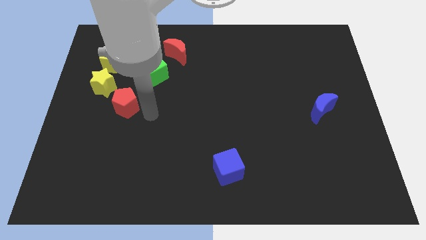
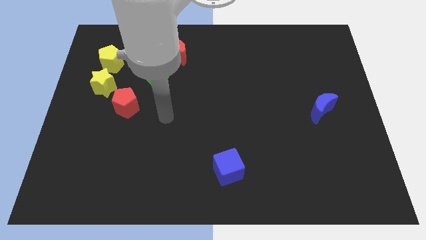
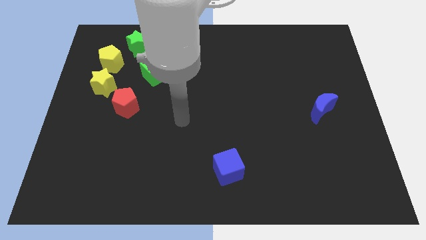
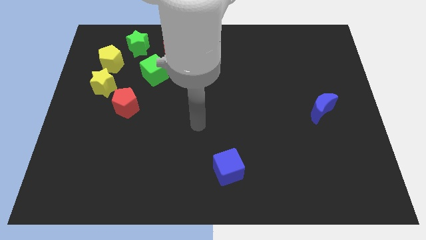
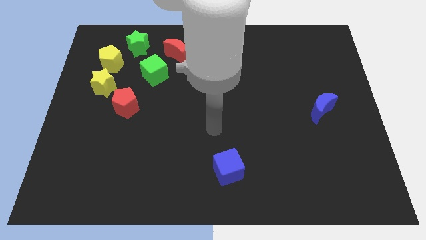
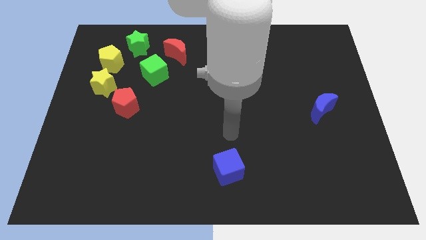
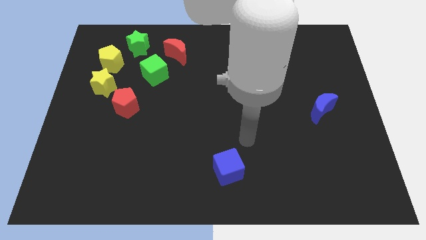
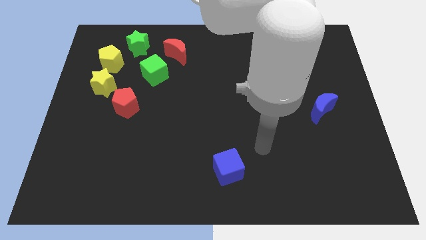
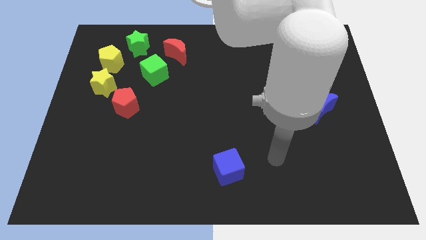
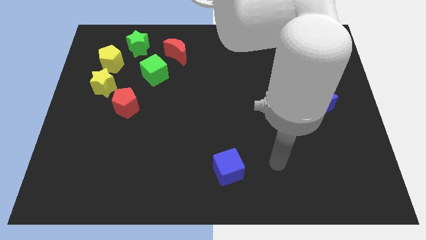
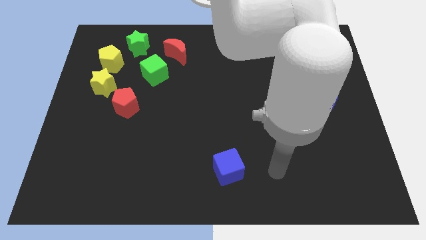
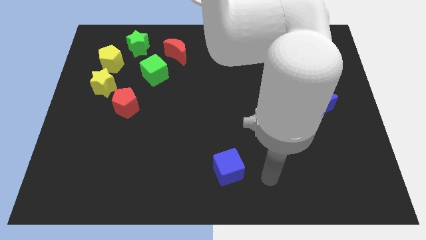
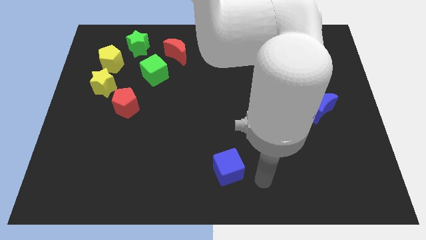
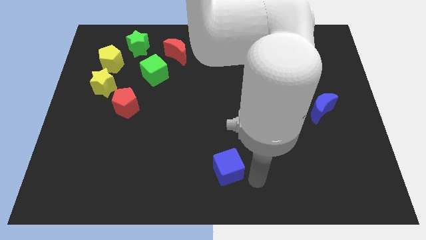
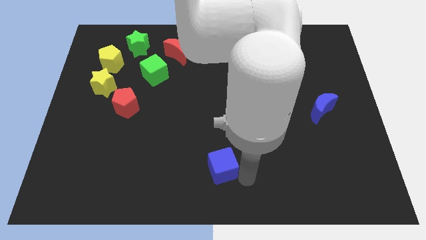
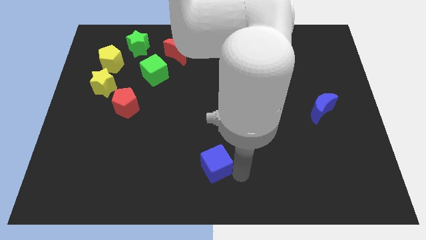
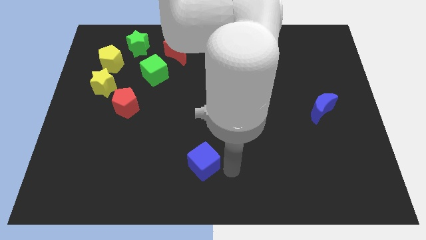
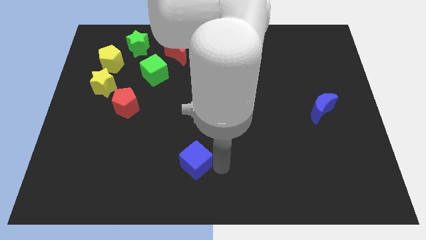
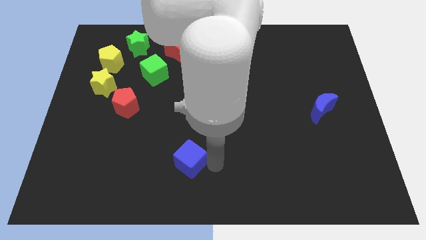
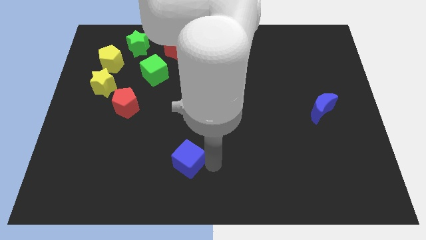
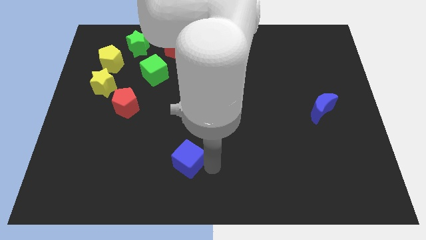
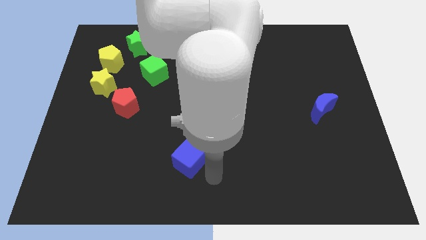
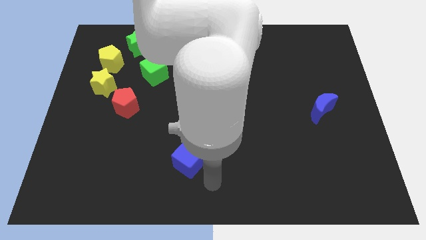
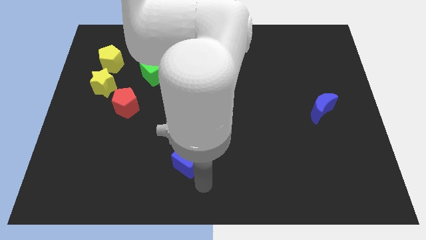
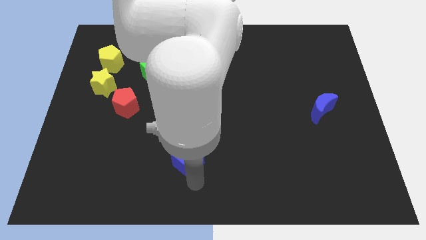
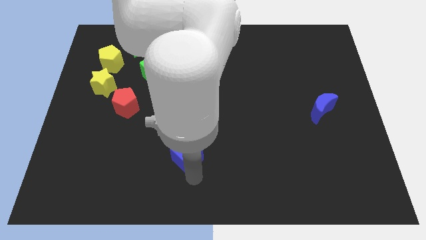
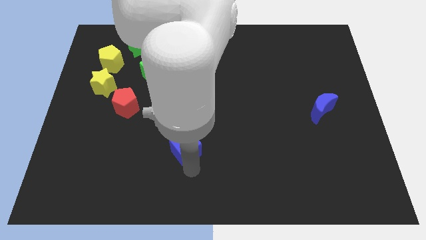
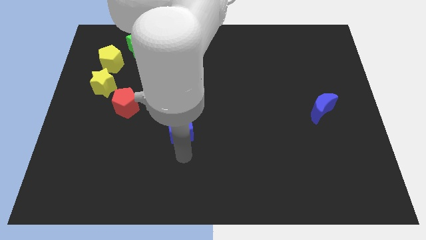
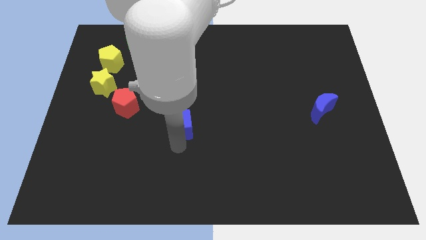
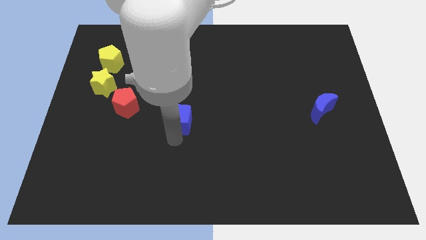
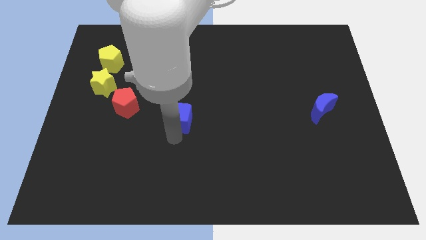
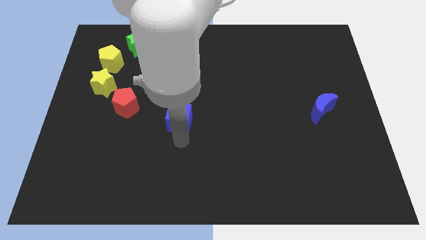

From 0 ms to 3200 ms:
move the blue cube up slightly

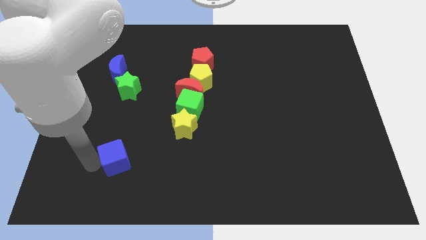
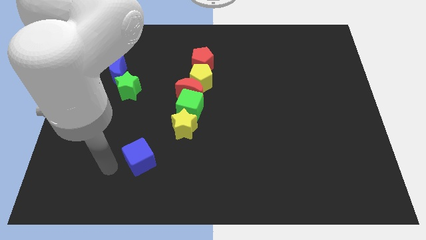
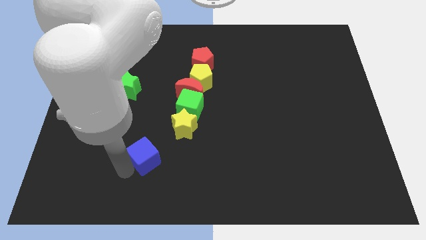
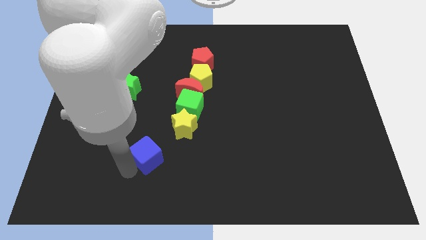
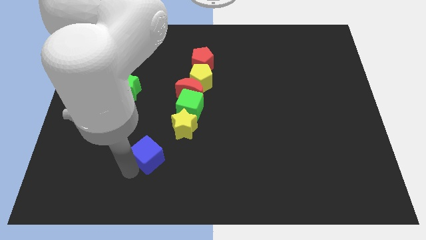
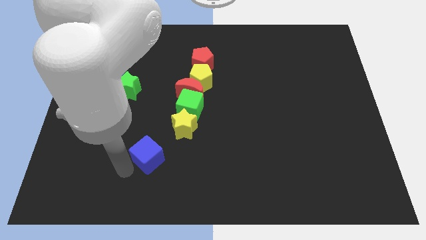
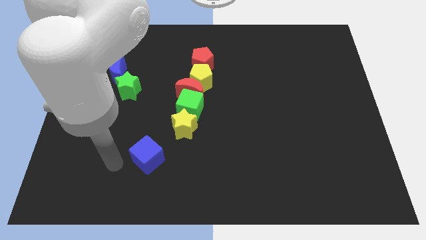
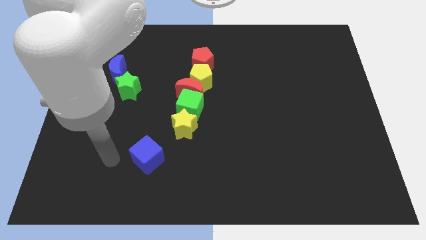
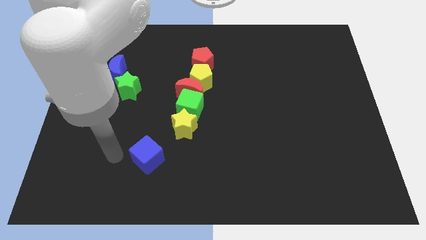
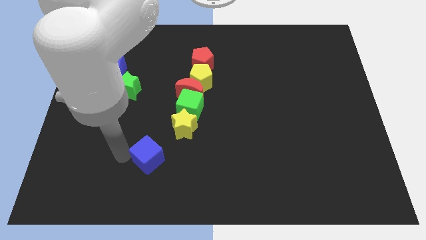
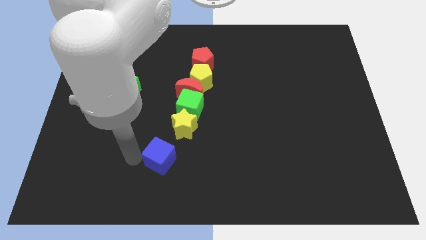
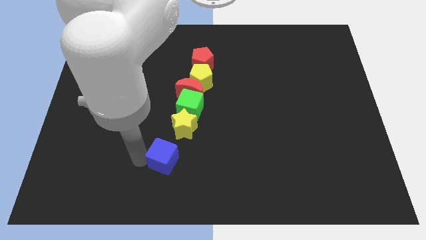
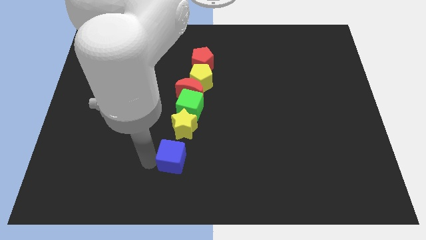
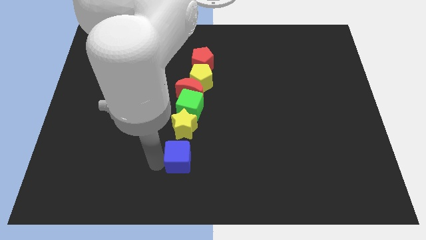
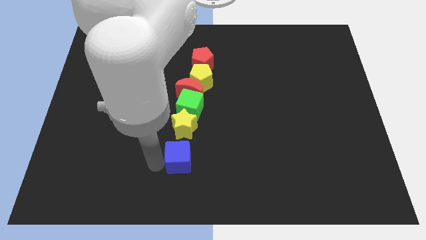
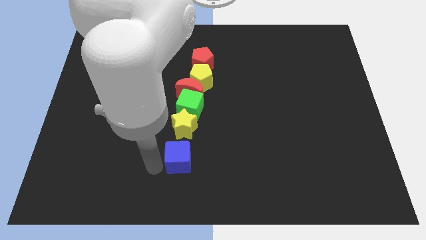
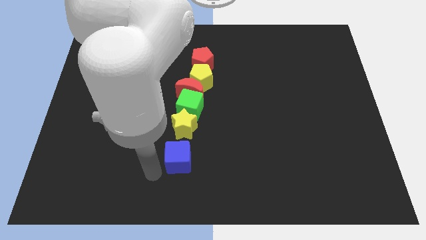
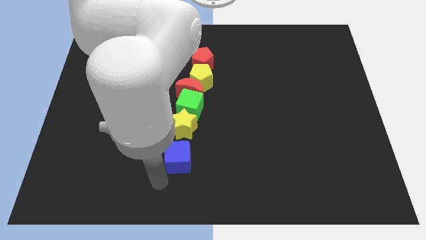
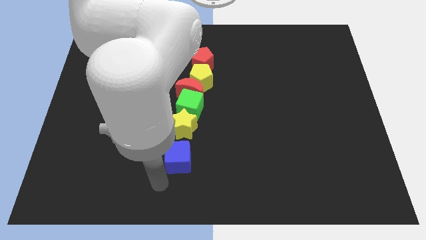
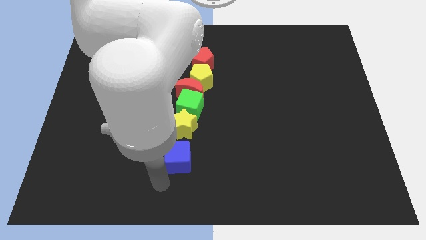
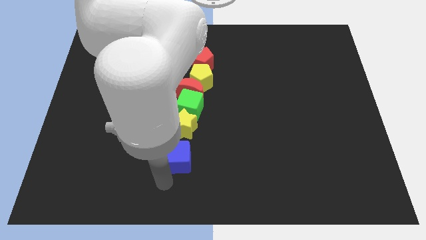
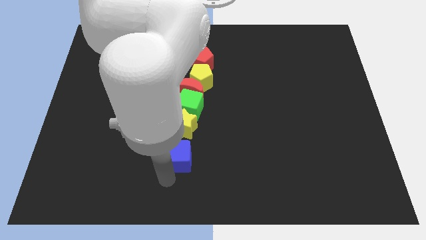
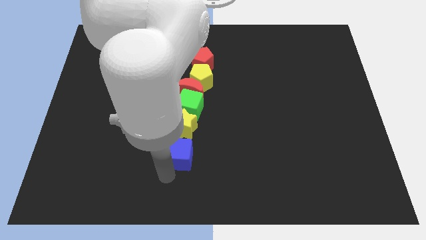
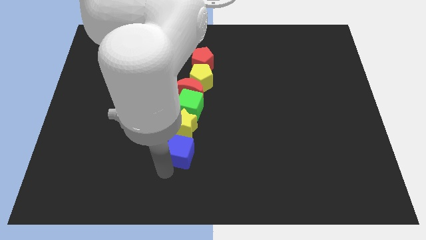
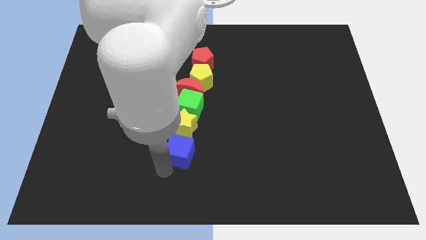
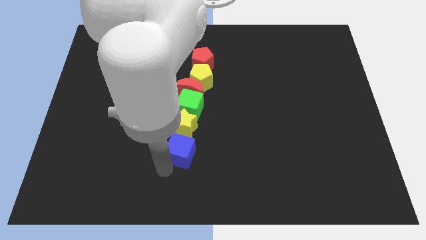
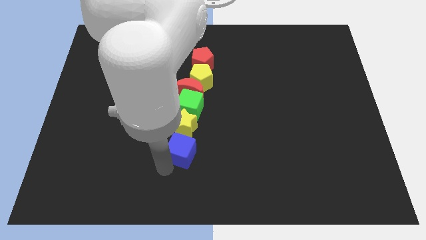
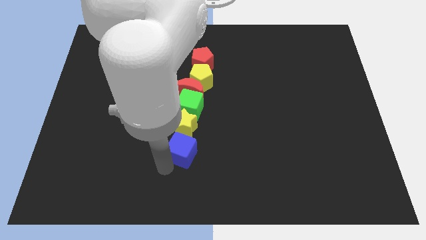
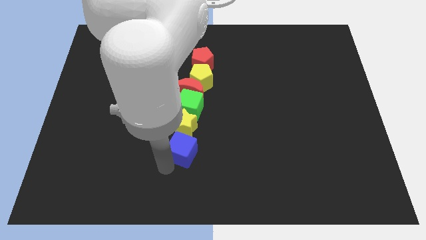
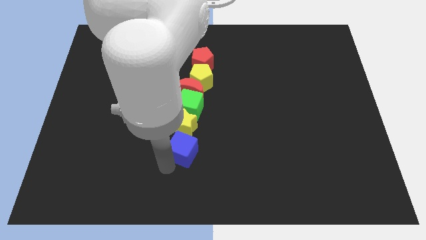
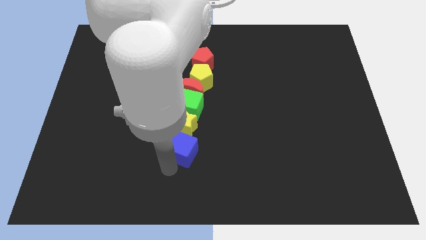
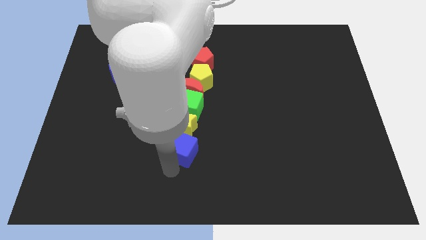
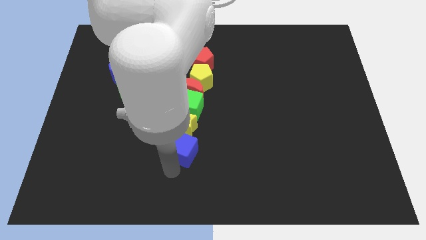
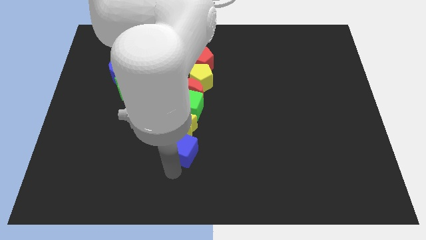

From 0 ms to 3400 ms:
push blue cube below yellow star

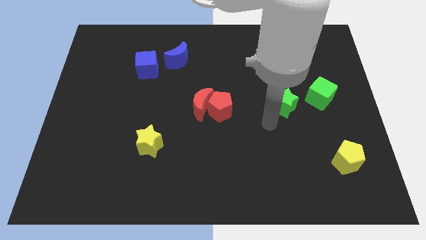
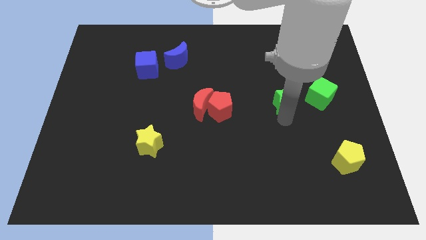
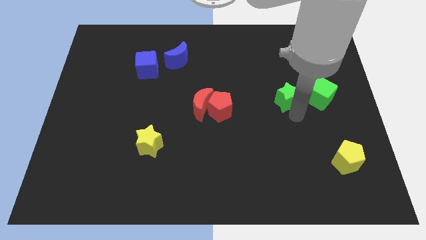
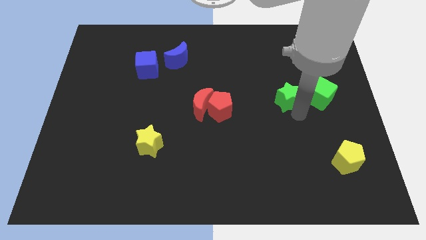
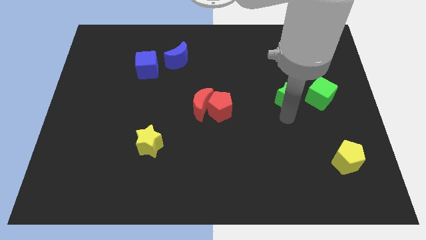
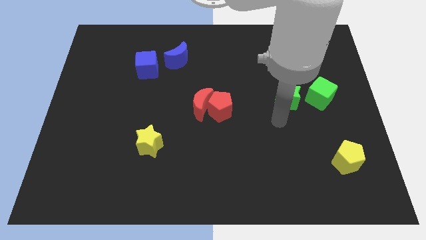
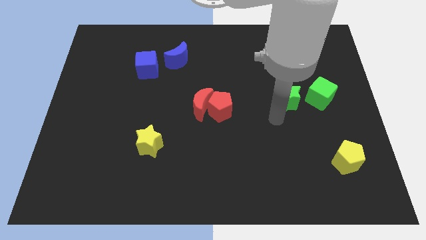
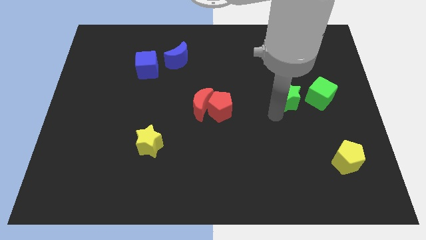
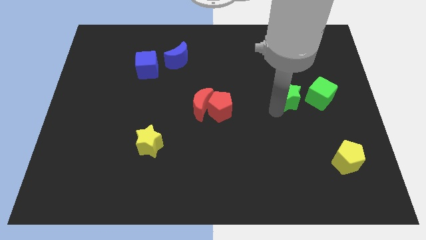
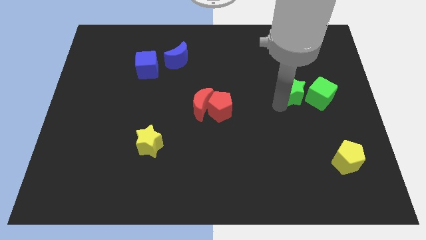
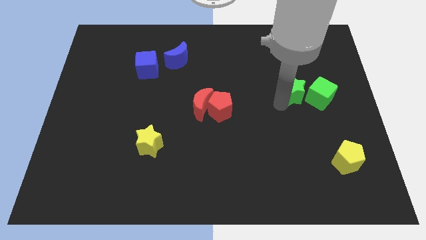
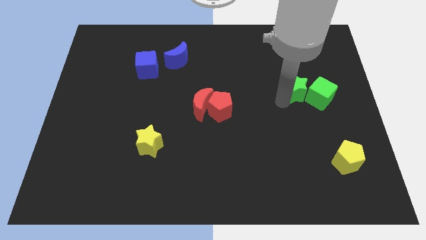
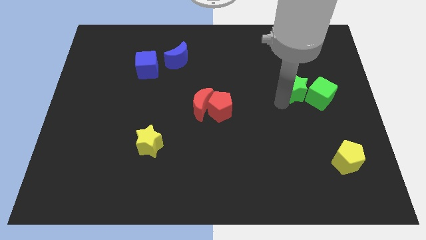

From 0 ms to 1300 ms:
push the green star into the green cube

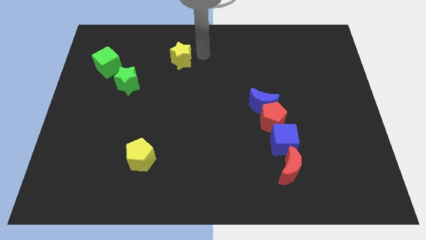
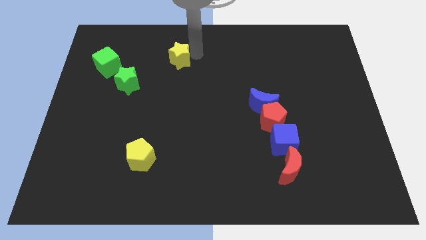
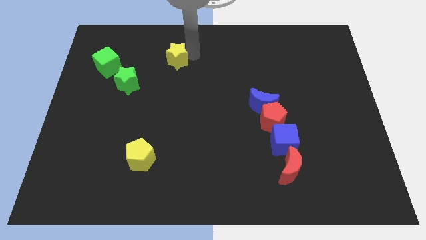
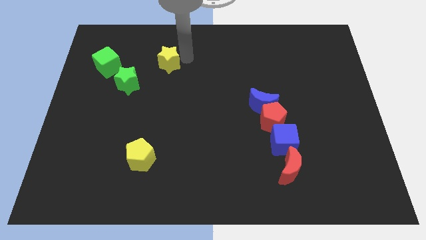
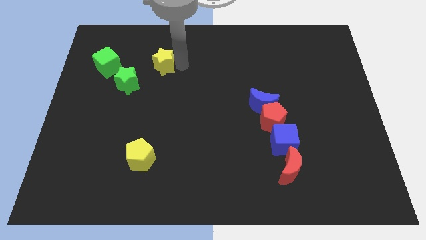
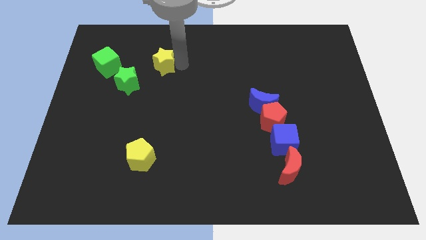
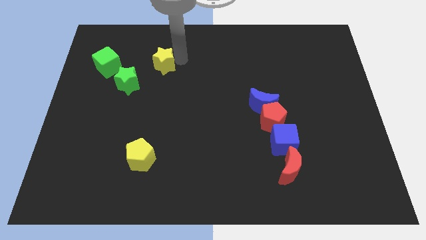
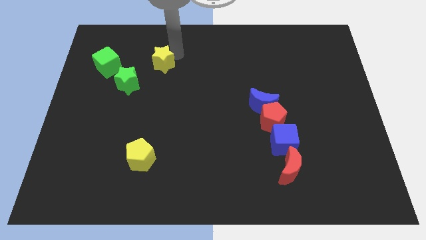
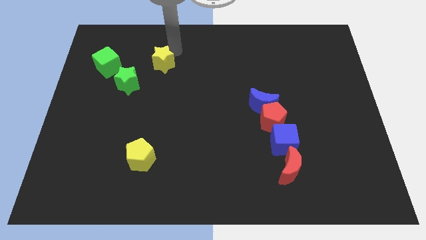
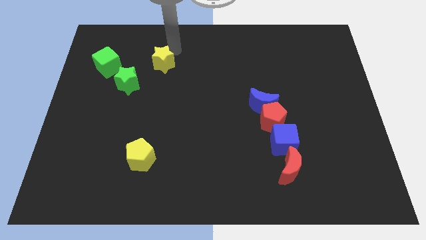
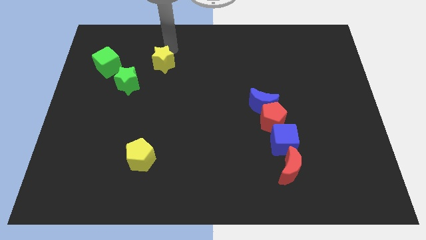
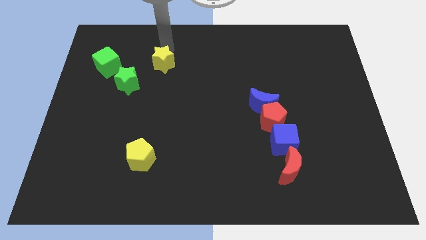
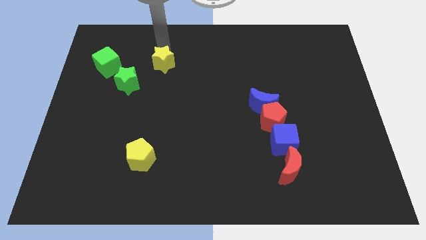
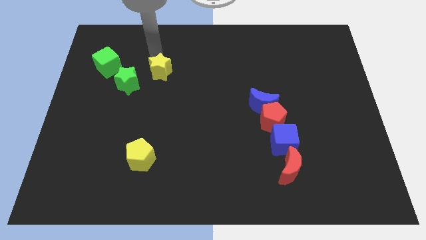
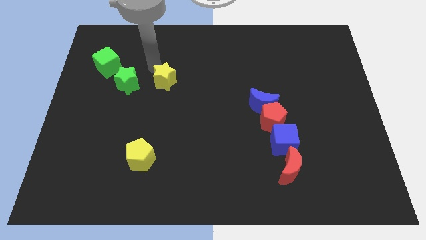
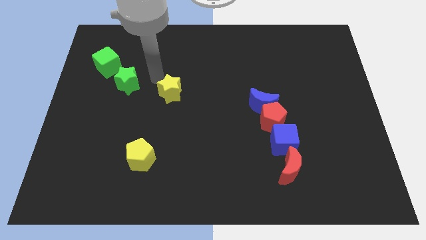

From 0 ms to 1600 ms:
move the yellow star to the right side of the green star
